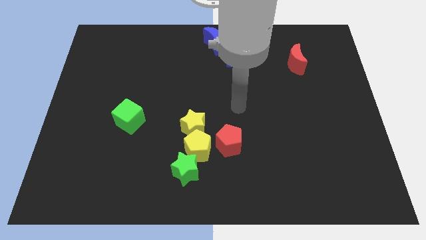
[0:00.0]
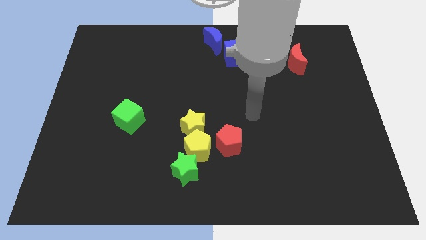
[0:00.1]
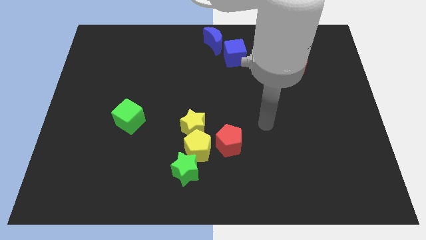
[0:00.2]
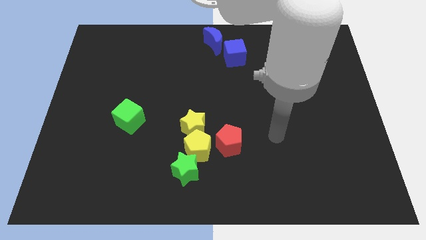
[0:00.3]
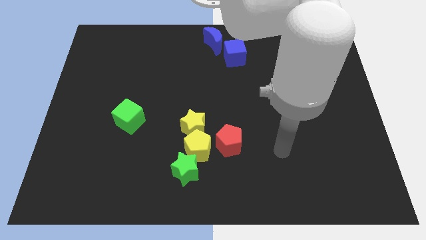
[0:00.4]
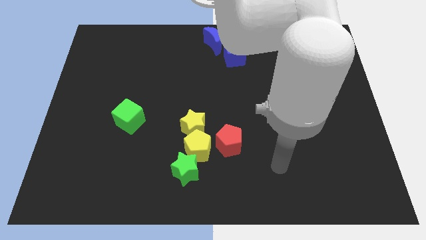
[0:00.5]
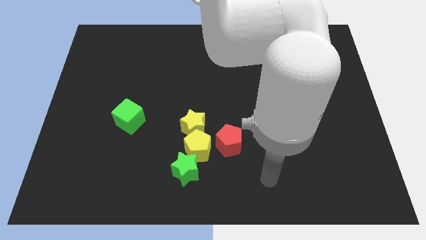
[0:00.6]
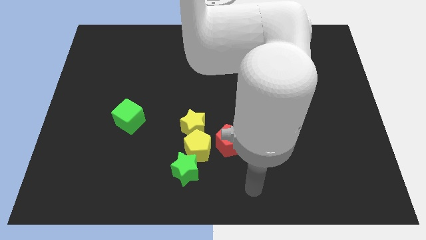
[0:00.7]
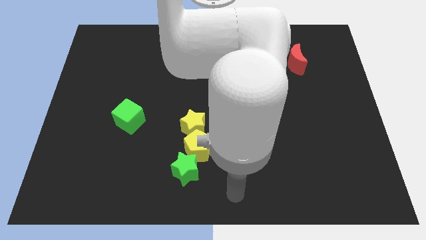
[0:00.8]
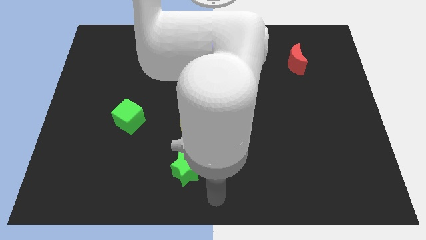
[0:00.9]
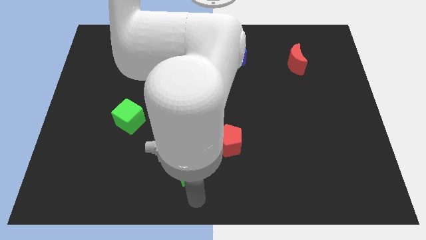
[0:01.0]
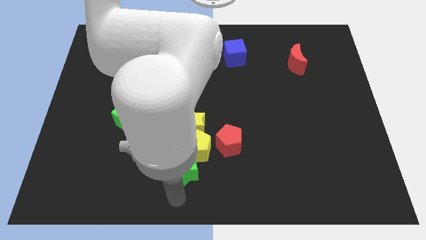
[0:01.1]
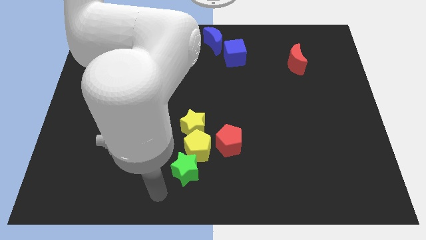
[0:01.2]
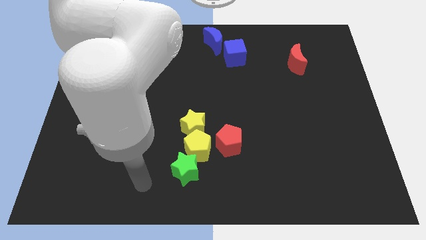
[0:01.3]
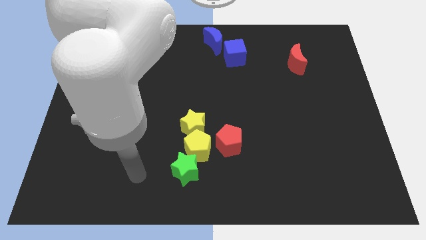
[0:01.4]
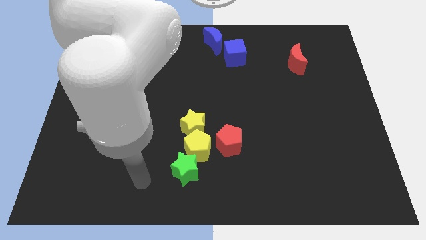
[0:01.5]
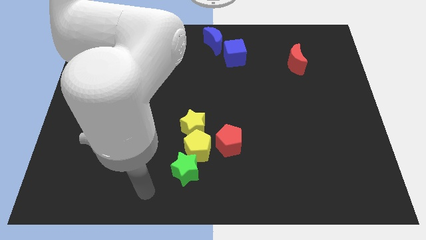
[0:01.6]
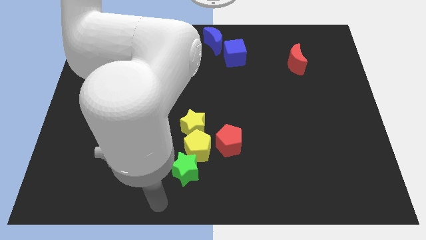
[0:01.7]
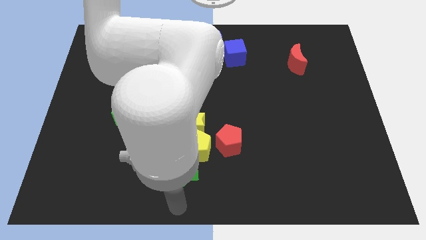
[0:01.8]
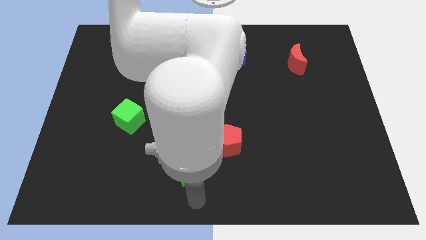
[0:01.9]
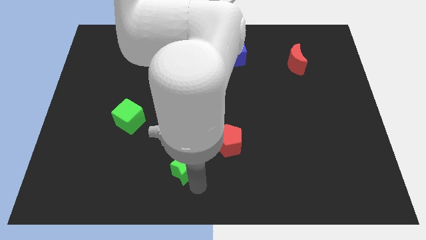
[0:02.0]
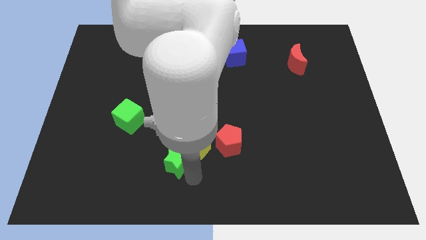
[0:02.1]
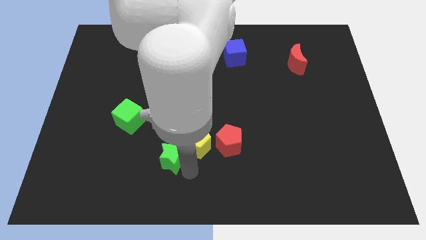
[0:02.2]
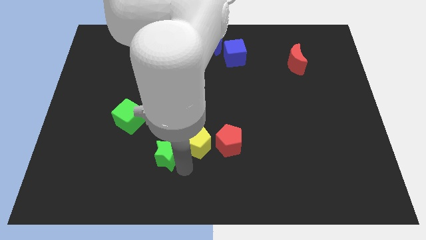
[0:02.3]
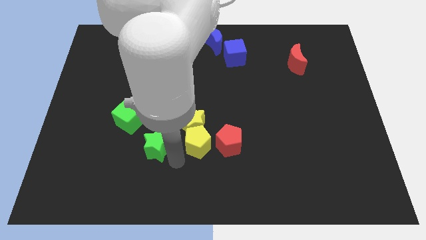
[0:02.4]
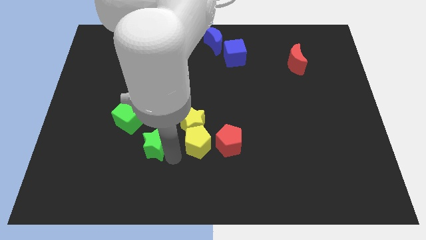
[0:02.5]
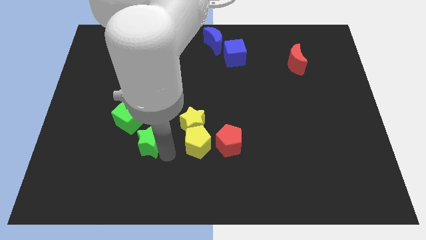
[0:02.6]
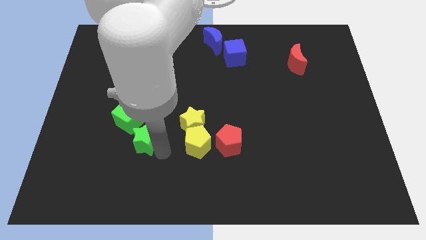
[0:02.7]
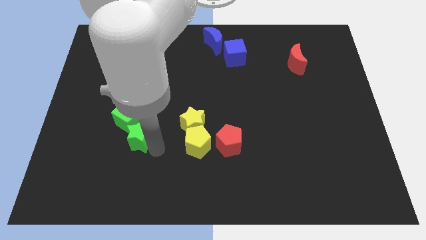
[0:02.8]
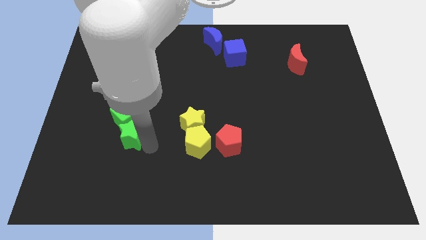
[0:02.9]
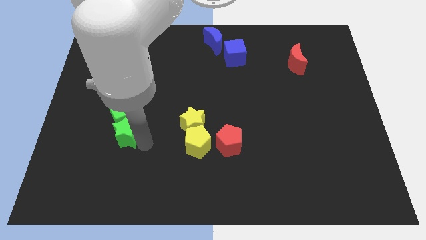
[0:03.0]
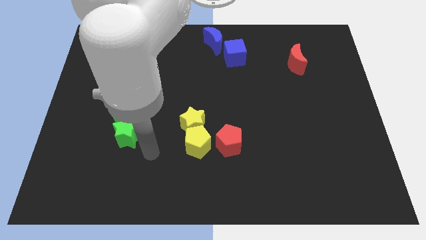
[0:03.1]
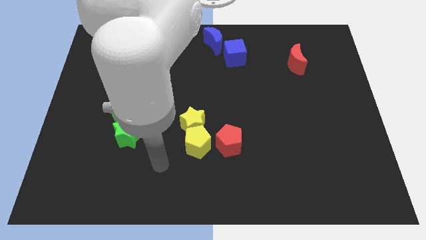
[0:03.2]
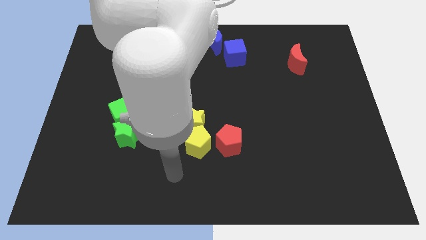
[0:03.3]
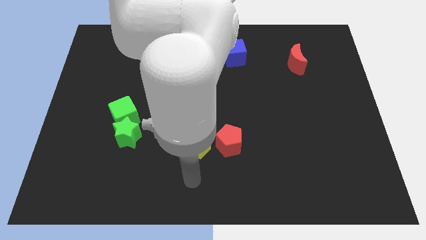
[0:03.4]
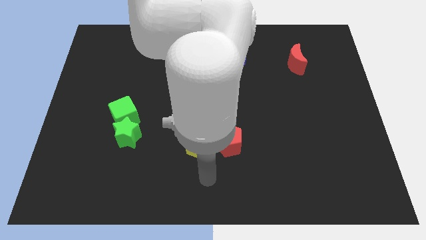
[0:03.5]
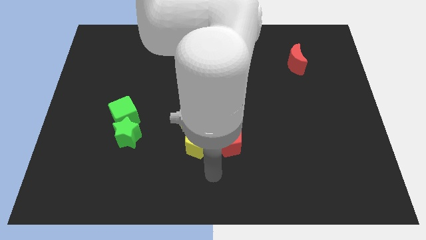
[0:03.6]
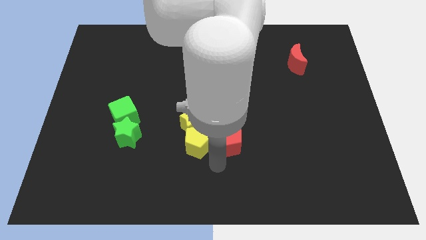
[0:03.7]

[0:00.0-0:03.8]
push the green star to the bottom of the green cube

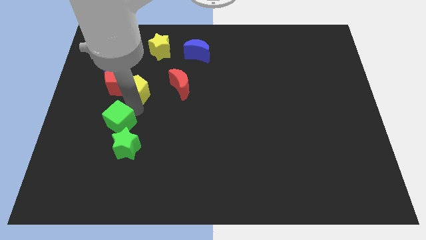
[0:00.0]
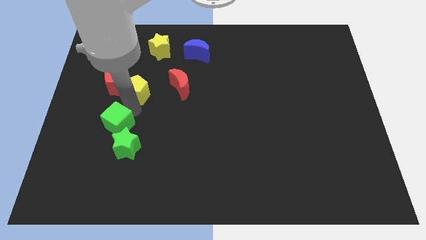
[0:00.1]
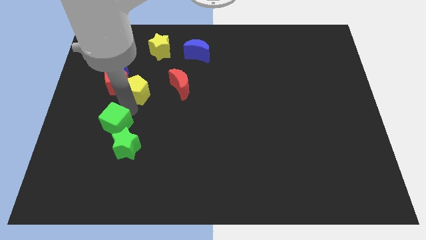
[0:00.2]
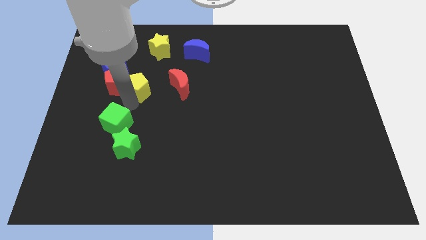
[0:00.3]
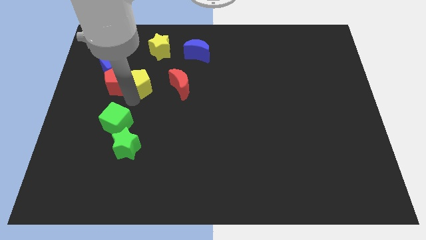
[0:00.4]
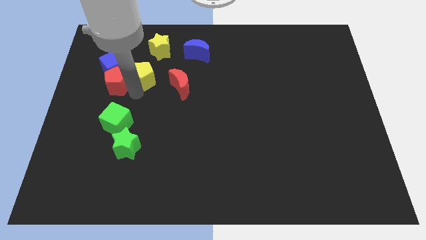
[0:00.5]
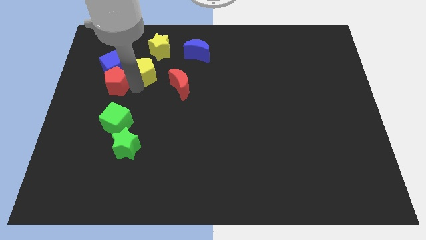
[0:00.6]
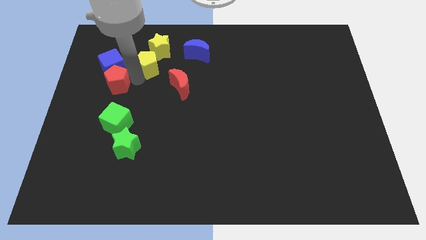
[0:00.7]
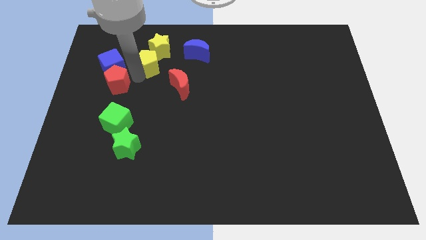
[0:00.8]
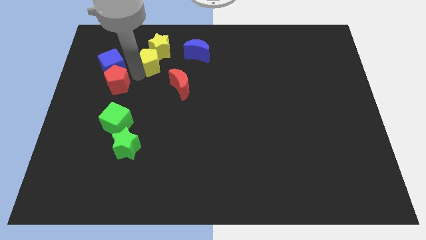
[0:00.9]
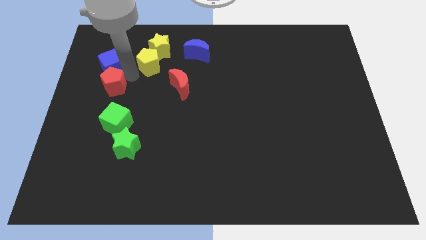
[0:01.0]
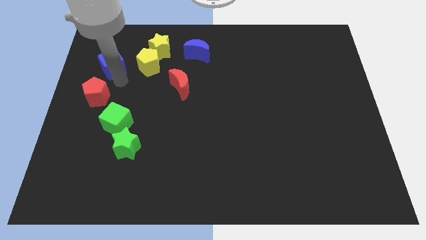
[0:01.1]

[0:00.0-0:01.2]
place the yellow pentagon below the yellow star

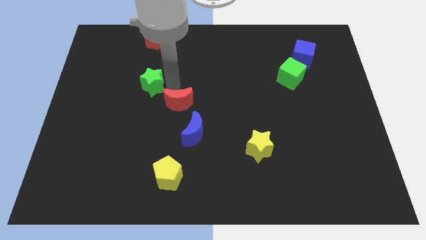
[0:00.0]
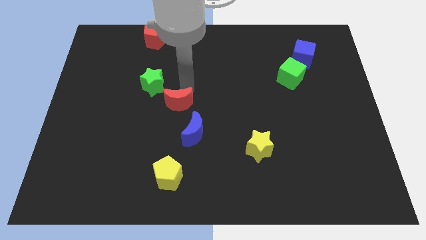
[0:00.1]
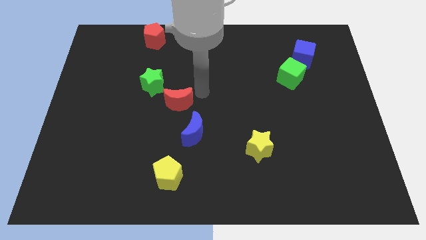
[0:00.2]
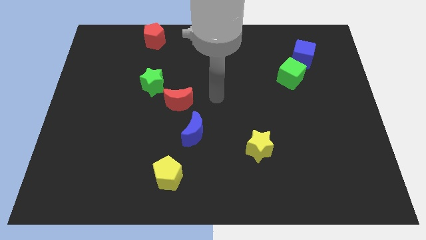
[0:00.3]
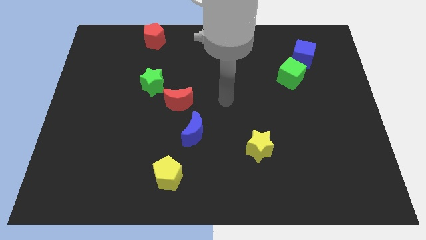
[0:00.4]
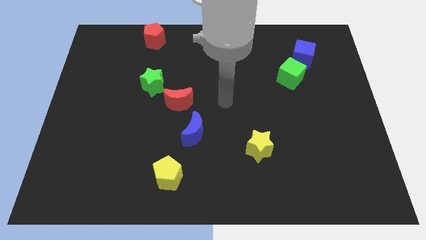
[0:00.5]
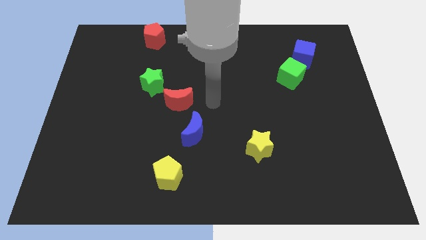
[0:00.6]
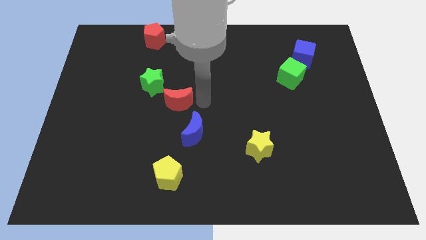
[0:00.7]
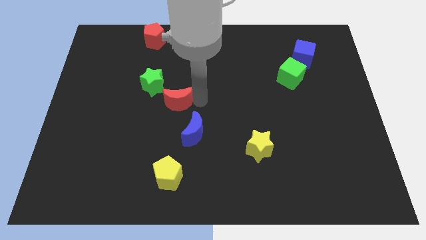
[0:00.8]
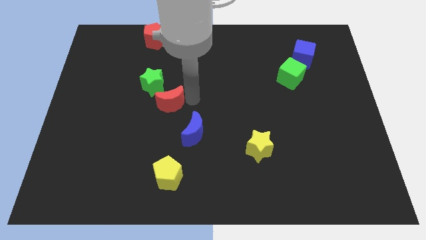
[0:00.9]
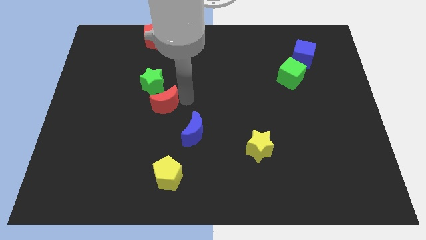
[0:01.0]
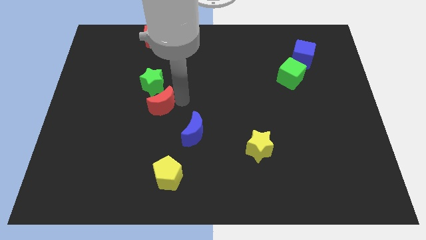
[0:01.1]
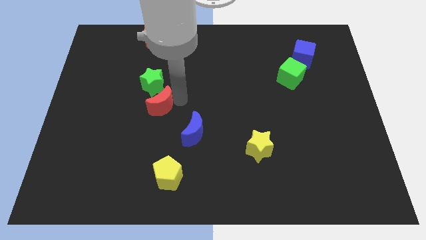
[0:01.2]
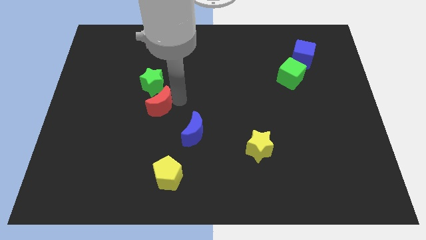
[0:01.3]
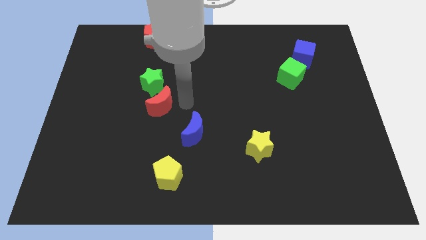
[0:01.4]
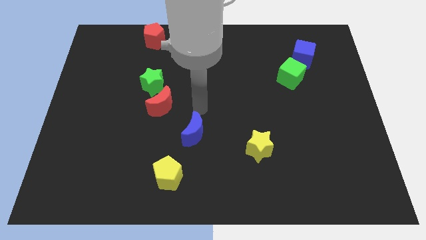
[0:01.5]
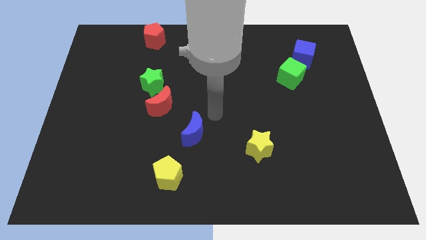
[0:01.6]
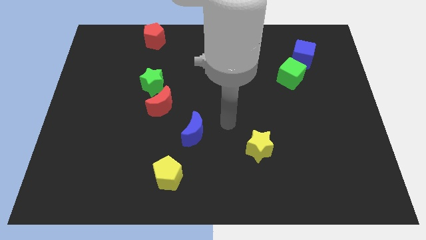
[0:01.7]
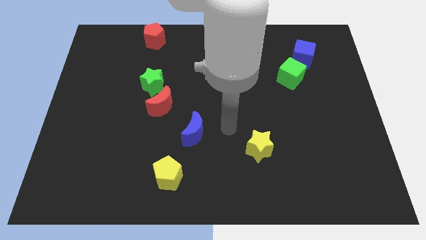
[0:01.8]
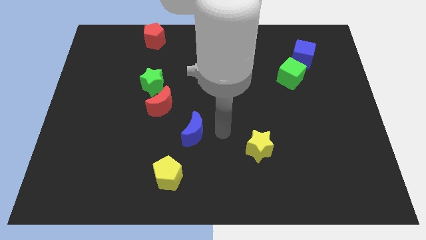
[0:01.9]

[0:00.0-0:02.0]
place the red moon underneath the green star

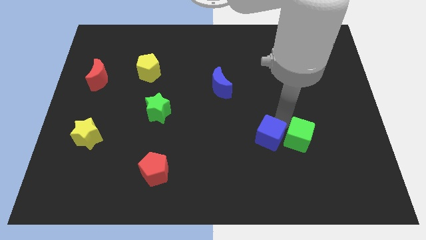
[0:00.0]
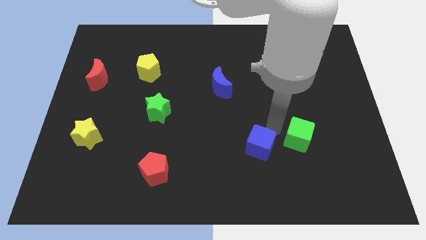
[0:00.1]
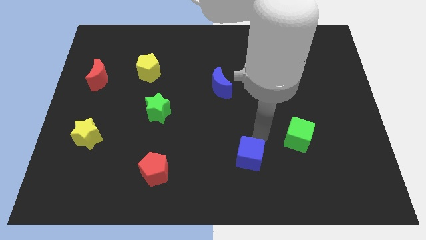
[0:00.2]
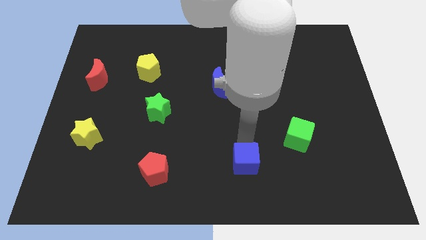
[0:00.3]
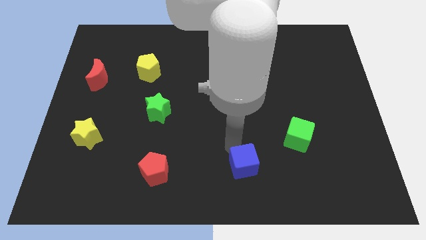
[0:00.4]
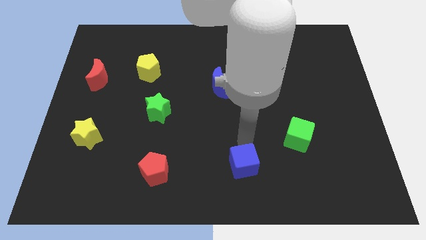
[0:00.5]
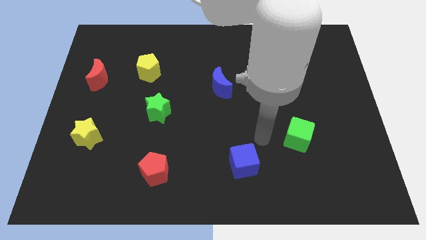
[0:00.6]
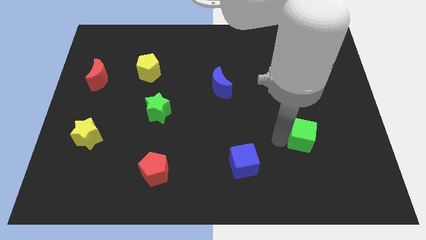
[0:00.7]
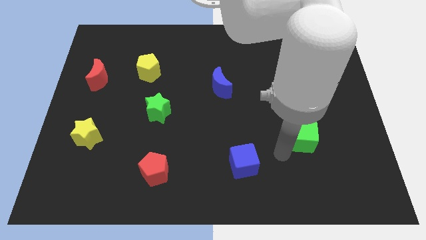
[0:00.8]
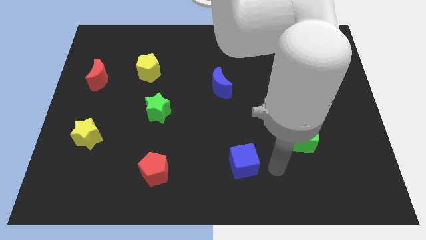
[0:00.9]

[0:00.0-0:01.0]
place the blue cube right to the red pentagon

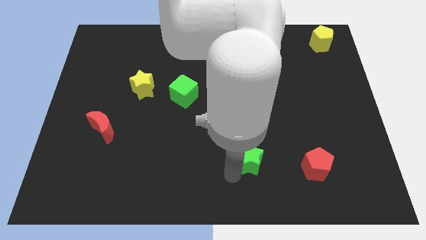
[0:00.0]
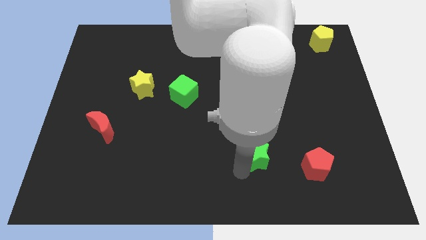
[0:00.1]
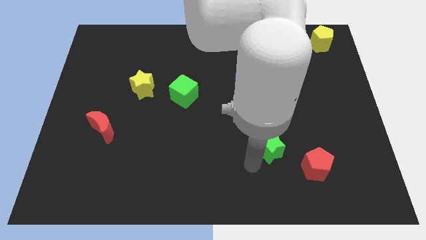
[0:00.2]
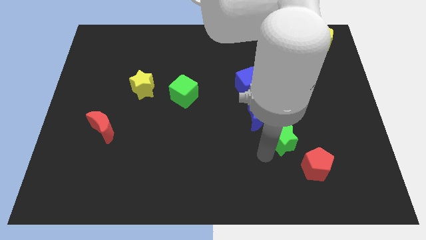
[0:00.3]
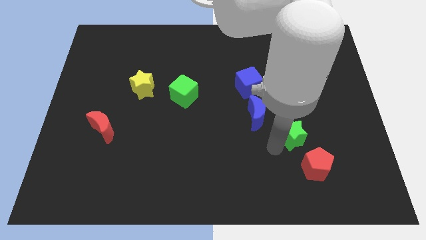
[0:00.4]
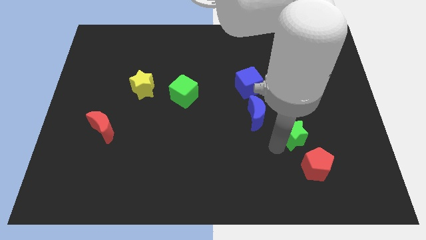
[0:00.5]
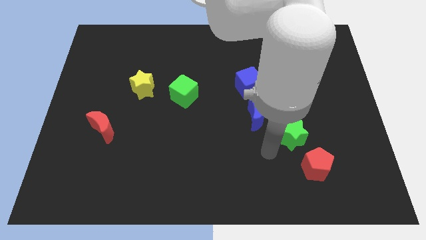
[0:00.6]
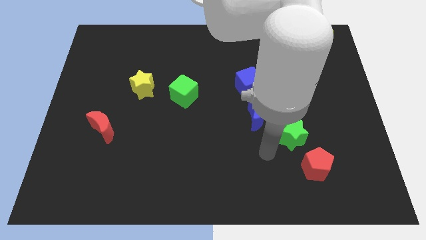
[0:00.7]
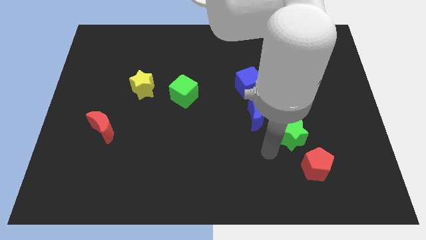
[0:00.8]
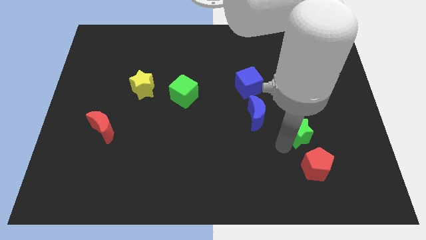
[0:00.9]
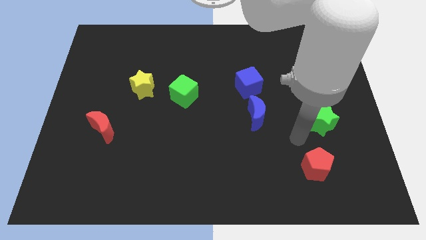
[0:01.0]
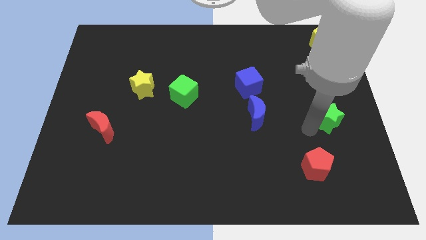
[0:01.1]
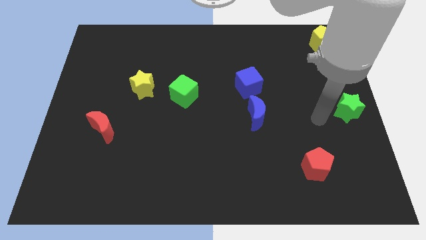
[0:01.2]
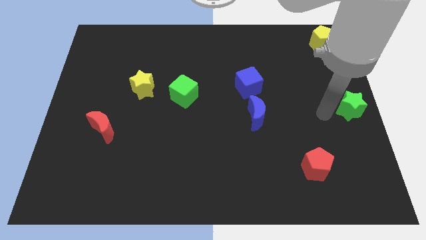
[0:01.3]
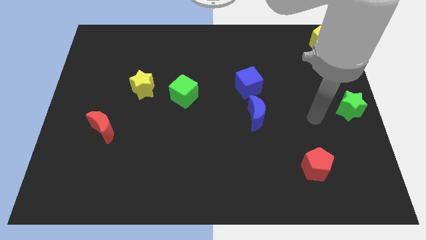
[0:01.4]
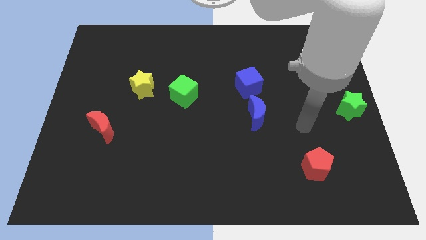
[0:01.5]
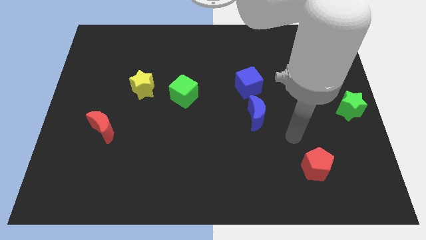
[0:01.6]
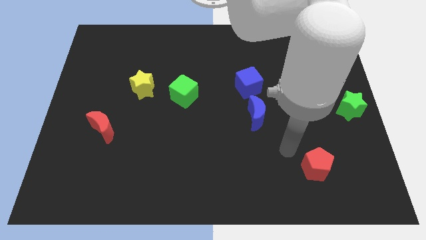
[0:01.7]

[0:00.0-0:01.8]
move the green star to the center right of the board
